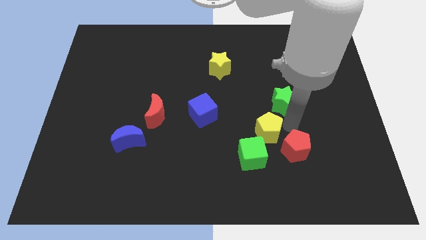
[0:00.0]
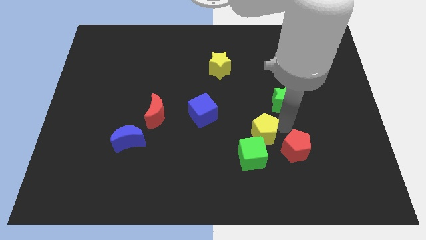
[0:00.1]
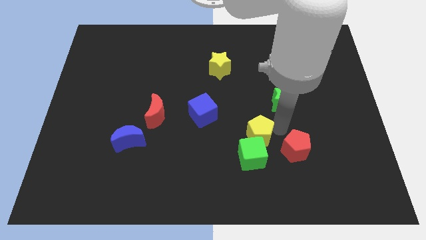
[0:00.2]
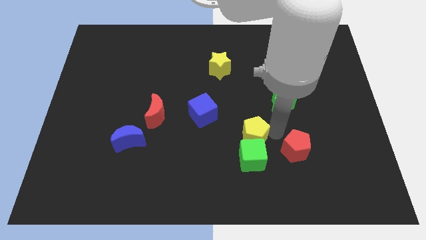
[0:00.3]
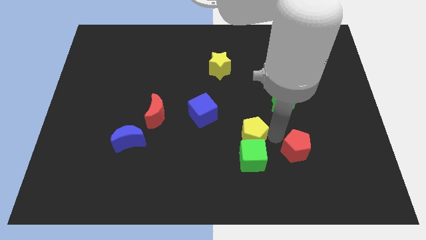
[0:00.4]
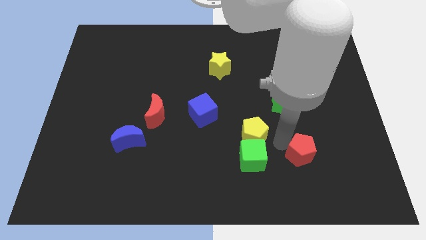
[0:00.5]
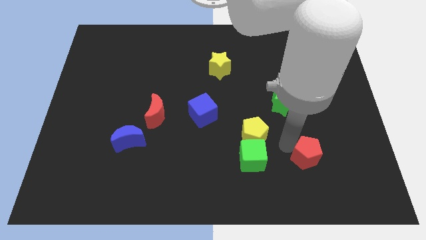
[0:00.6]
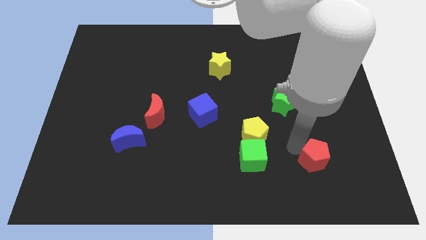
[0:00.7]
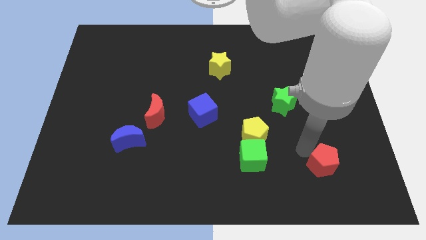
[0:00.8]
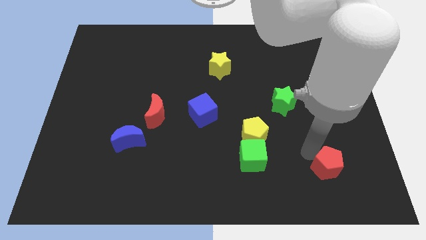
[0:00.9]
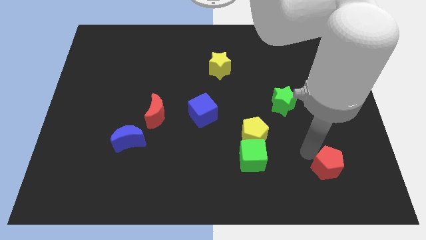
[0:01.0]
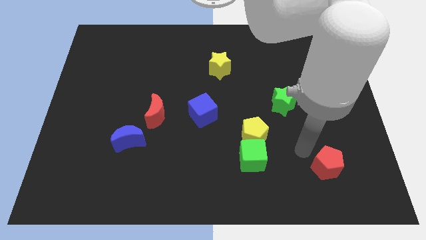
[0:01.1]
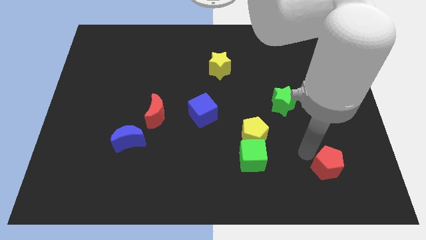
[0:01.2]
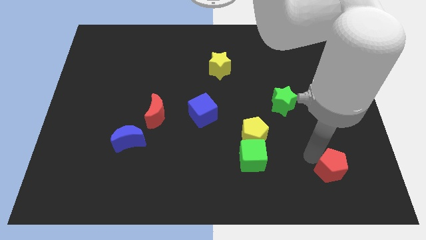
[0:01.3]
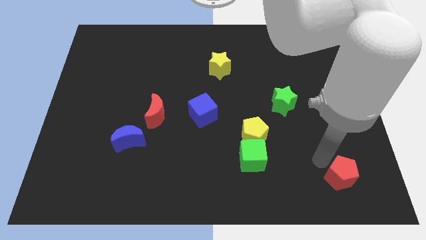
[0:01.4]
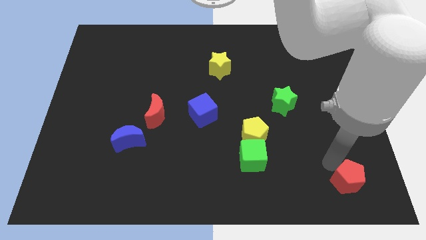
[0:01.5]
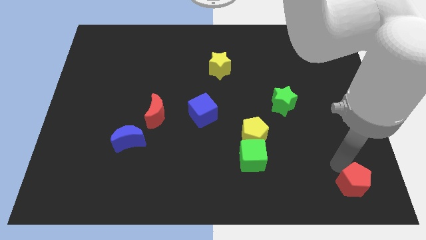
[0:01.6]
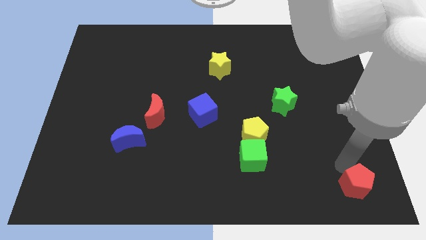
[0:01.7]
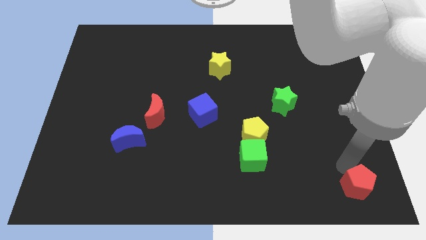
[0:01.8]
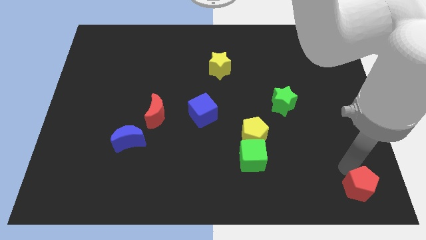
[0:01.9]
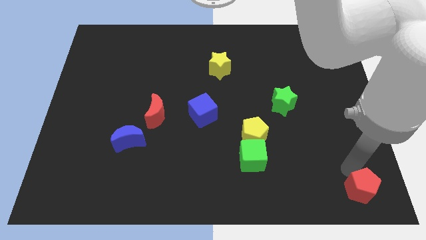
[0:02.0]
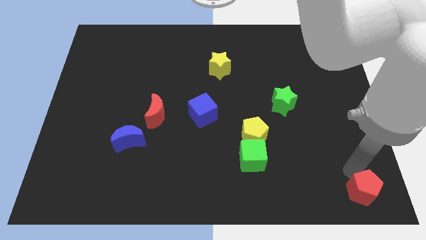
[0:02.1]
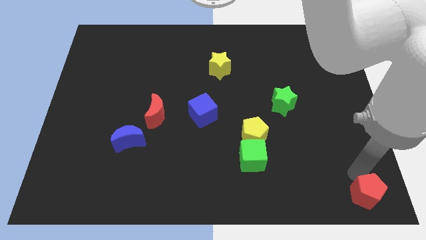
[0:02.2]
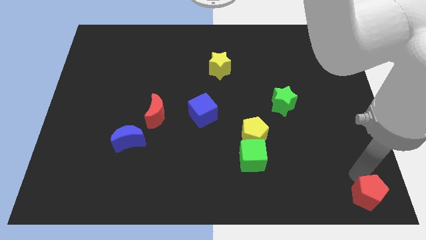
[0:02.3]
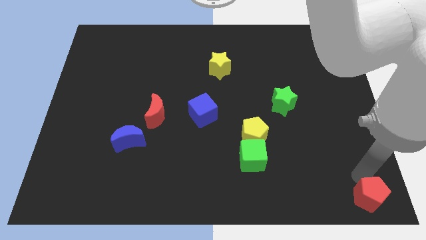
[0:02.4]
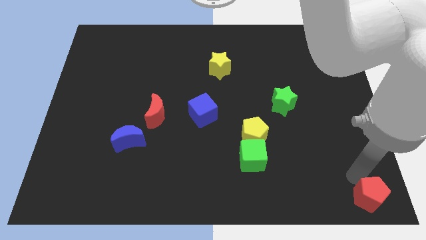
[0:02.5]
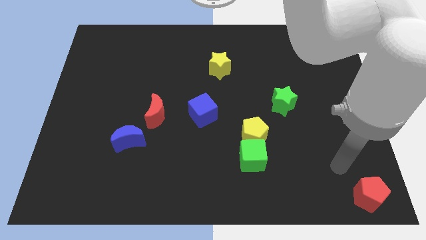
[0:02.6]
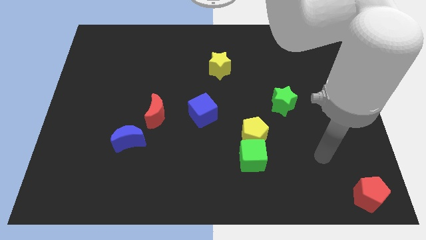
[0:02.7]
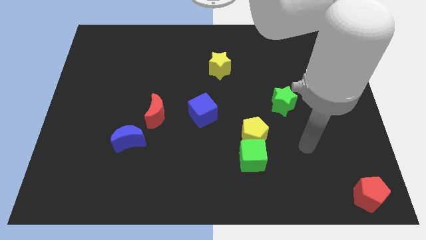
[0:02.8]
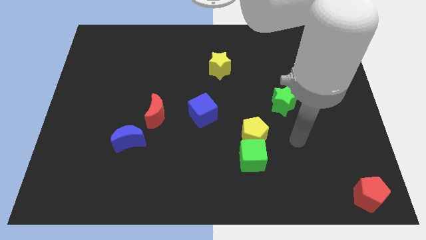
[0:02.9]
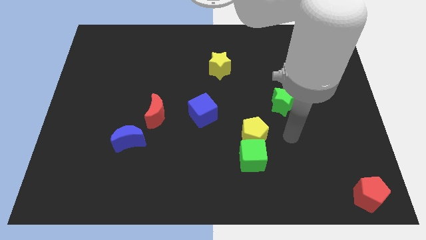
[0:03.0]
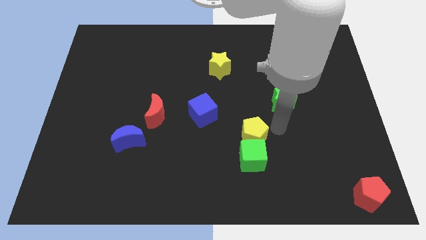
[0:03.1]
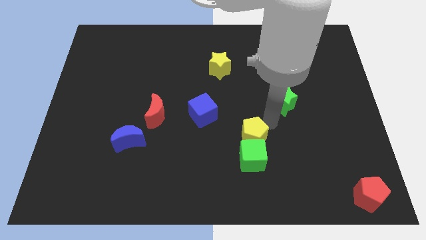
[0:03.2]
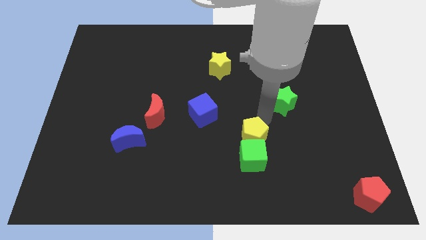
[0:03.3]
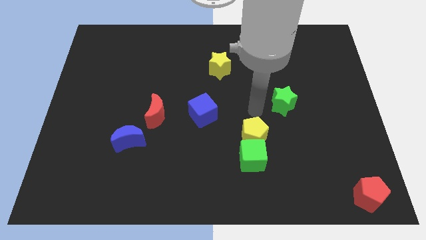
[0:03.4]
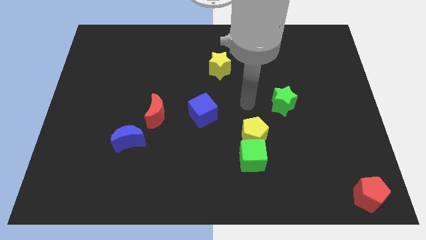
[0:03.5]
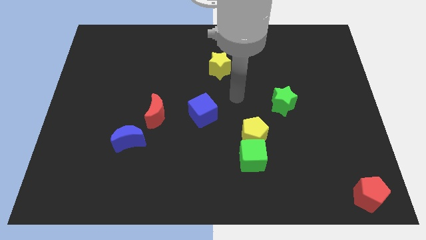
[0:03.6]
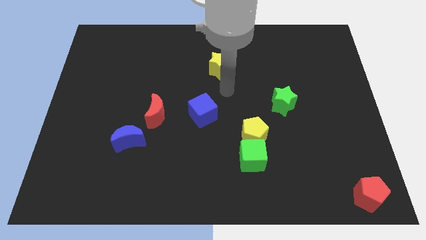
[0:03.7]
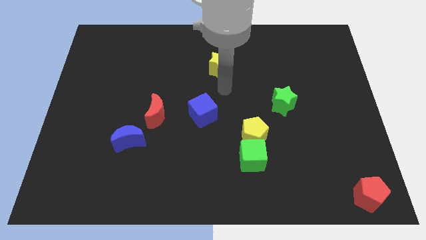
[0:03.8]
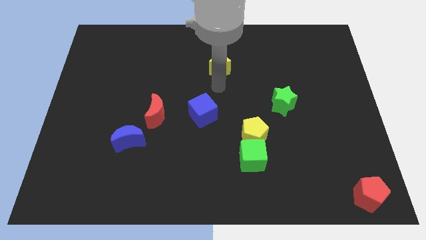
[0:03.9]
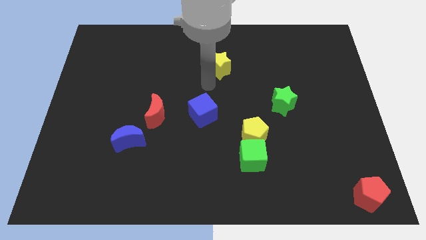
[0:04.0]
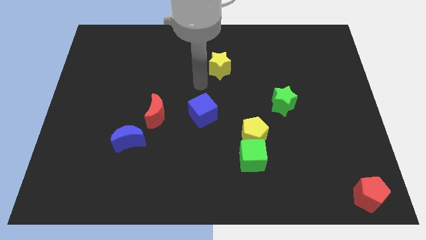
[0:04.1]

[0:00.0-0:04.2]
move red pentagon to the right bottom

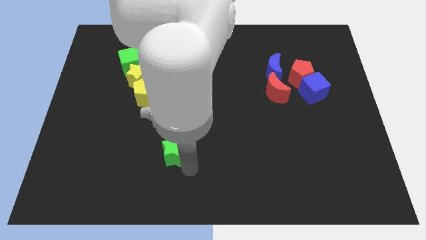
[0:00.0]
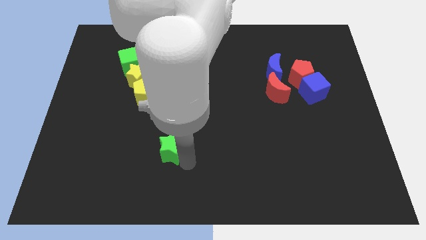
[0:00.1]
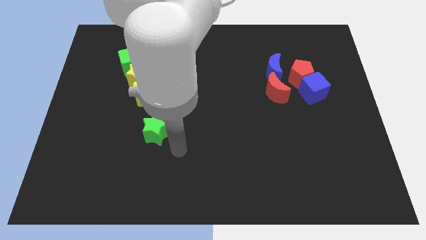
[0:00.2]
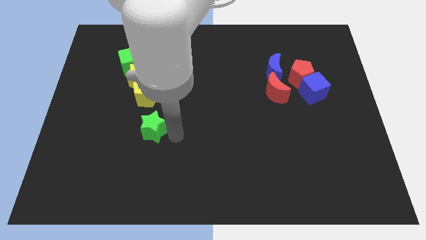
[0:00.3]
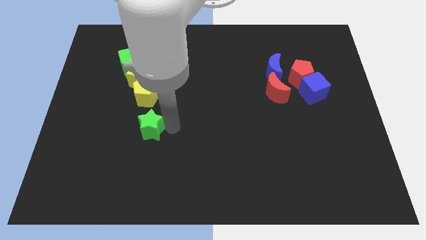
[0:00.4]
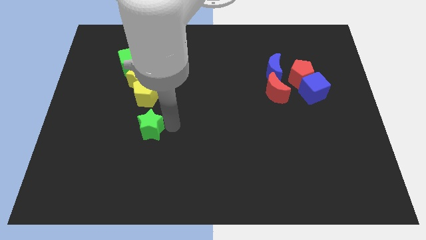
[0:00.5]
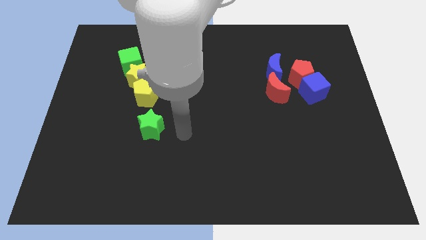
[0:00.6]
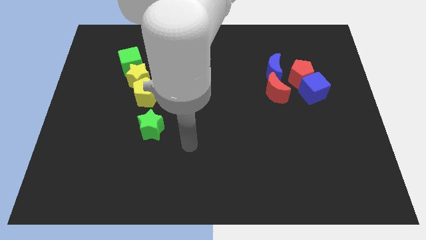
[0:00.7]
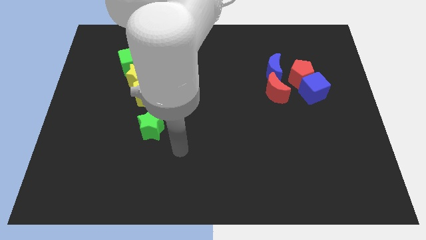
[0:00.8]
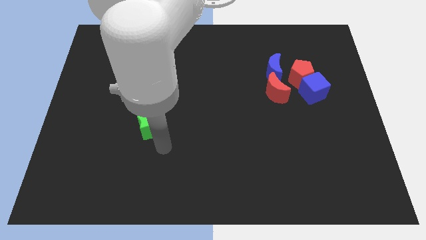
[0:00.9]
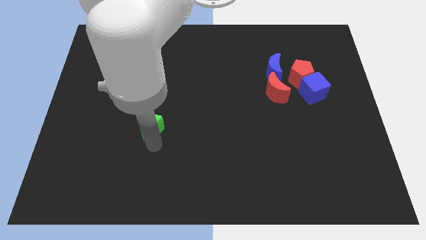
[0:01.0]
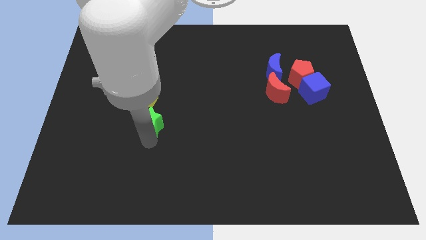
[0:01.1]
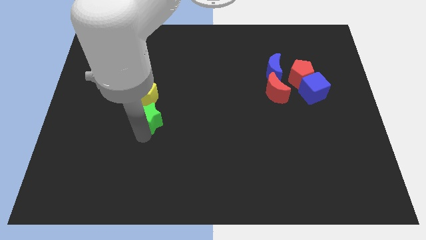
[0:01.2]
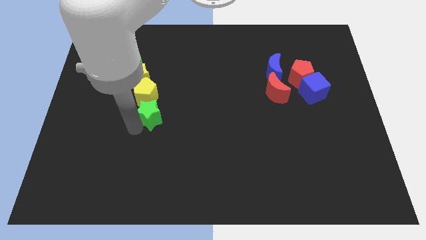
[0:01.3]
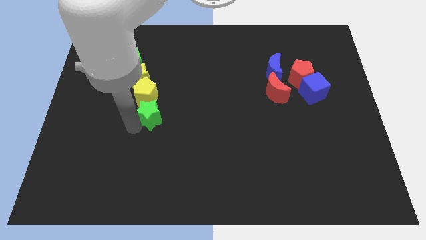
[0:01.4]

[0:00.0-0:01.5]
move the green star below the yellow pentagon

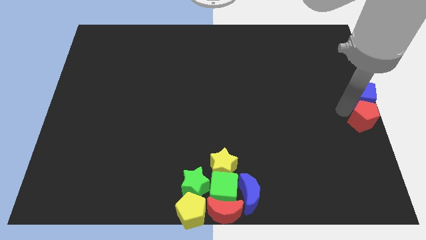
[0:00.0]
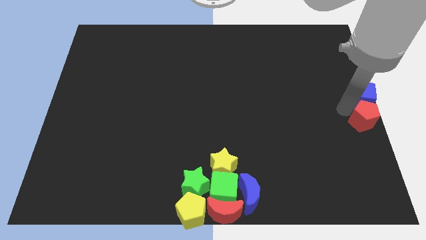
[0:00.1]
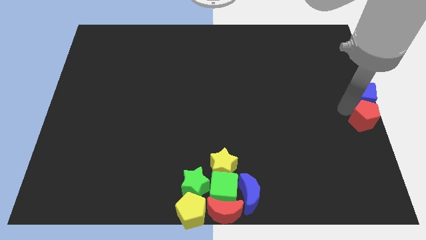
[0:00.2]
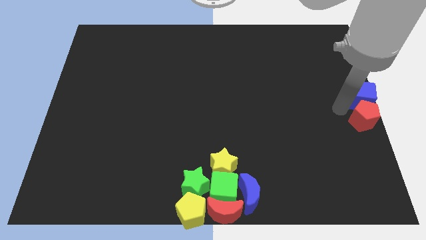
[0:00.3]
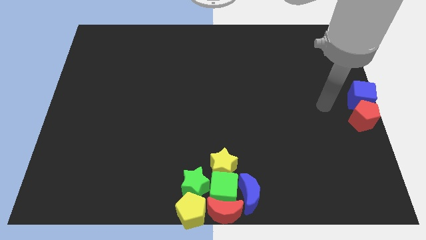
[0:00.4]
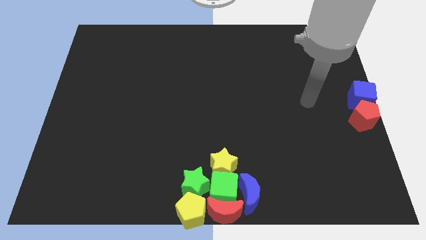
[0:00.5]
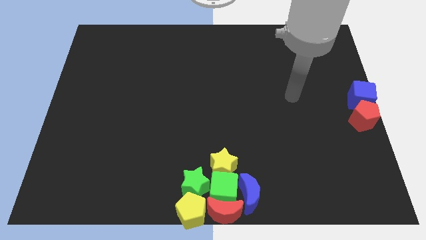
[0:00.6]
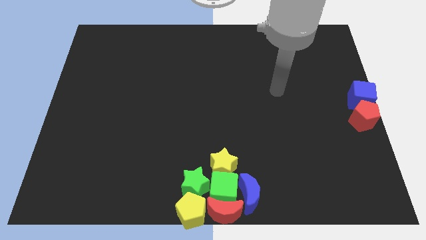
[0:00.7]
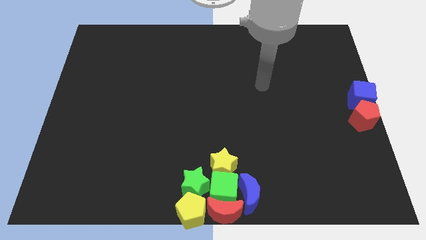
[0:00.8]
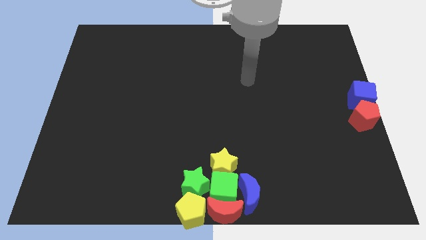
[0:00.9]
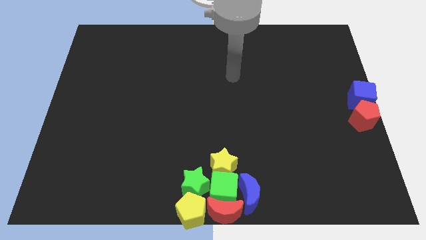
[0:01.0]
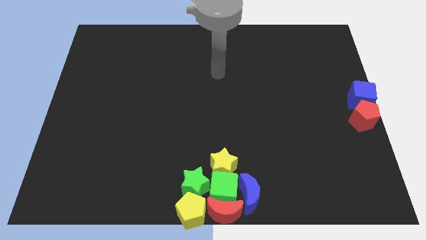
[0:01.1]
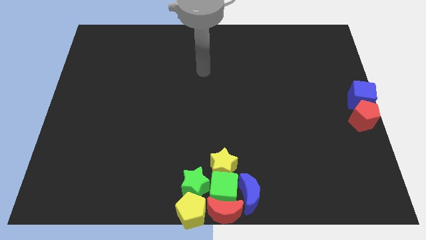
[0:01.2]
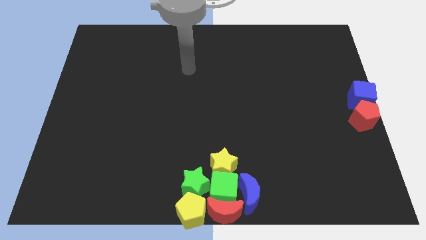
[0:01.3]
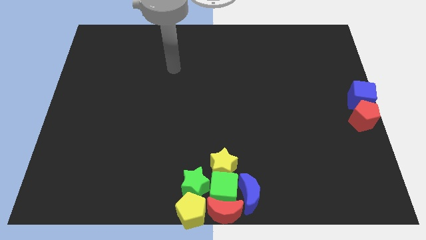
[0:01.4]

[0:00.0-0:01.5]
move your arm away from the red pentagon

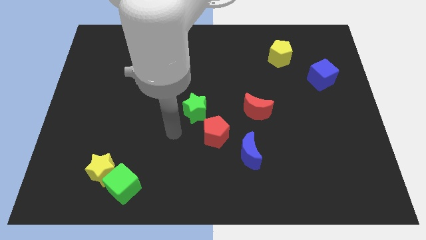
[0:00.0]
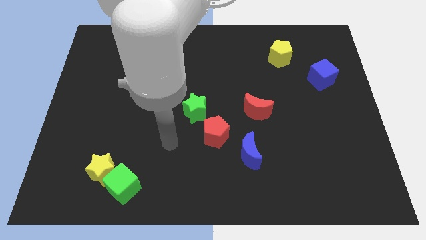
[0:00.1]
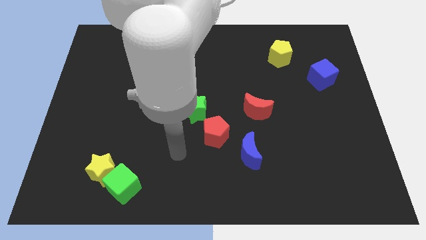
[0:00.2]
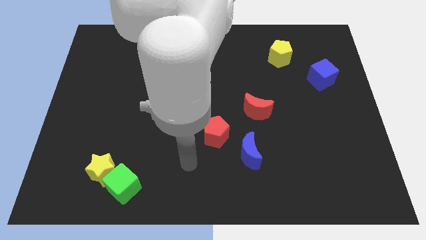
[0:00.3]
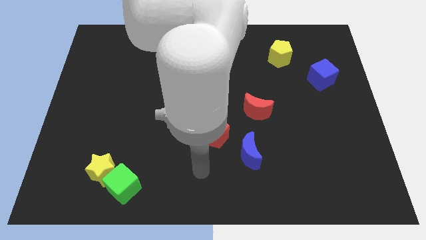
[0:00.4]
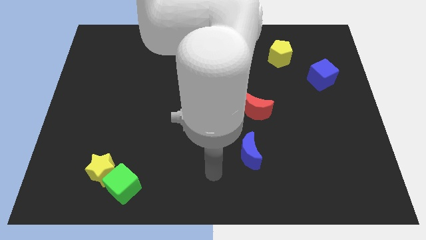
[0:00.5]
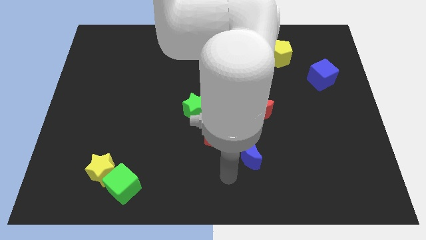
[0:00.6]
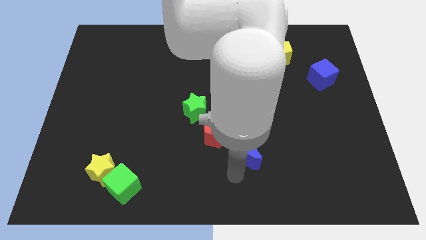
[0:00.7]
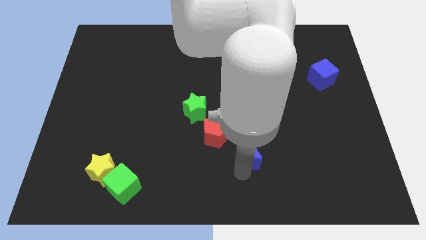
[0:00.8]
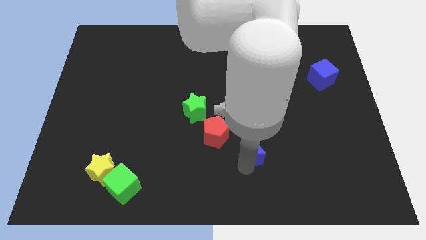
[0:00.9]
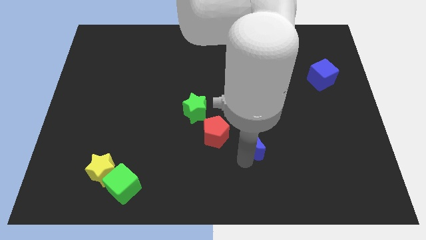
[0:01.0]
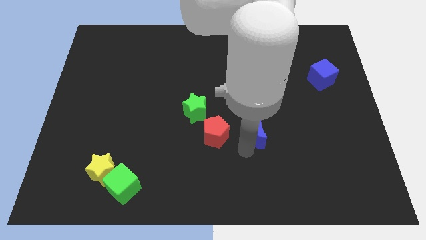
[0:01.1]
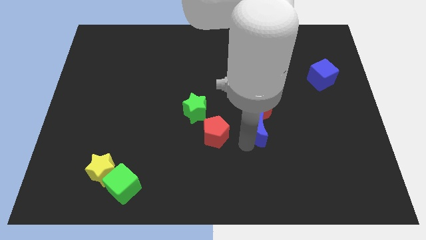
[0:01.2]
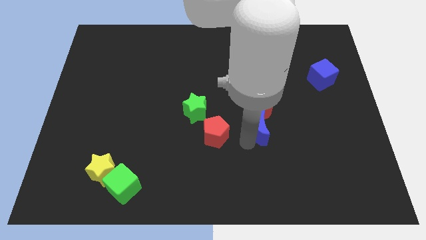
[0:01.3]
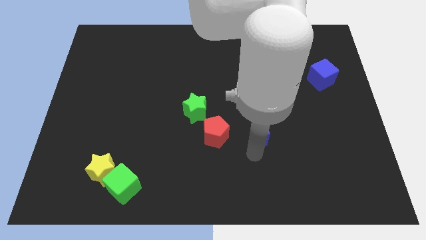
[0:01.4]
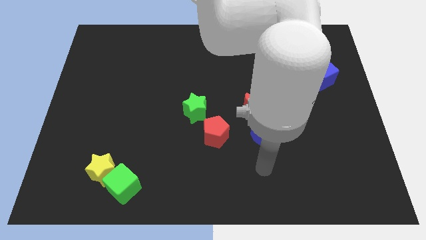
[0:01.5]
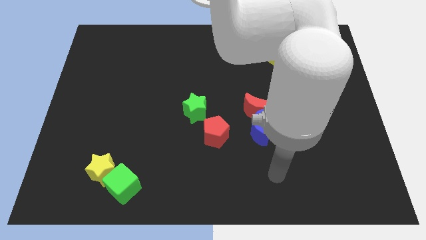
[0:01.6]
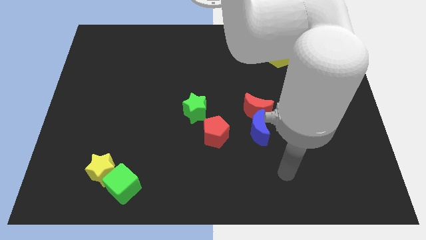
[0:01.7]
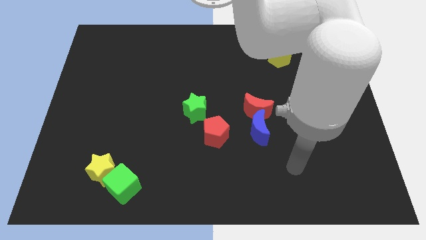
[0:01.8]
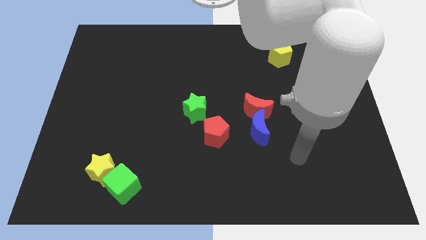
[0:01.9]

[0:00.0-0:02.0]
push the blue crescent towards the red crescent
